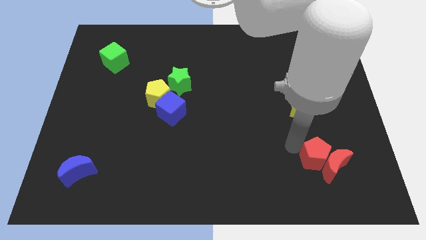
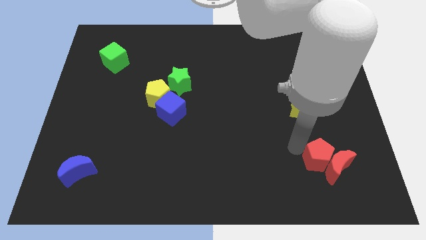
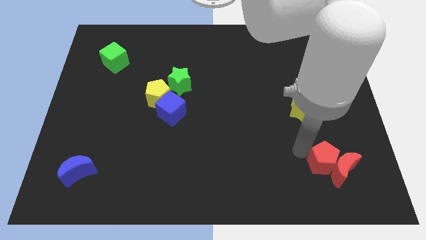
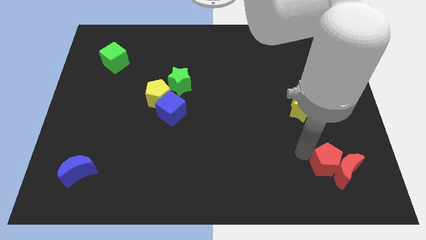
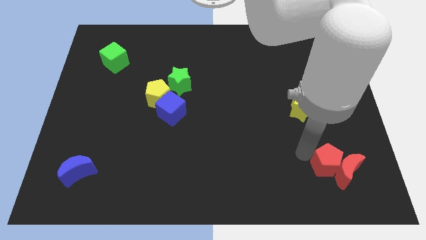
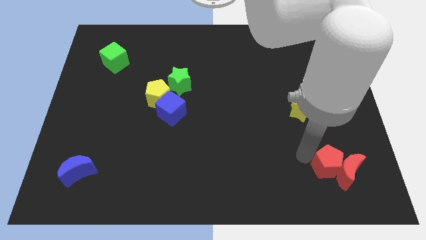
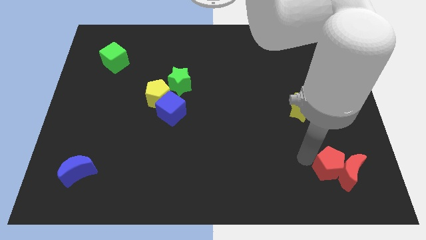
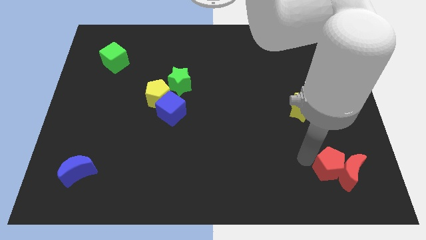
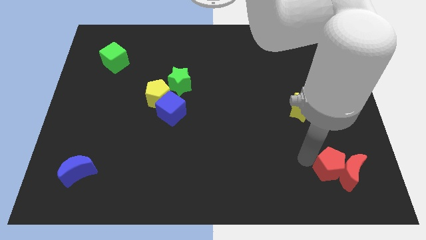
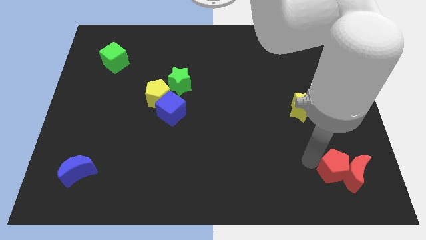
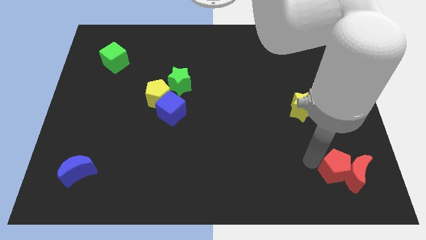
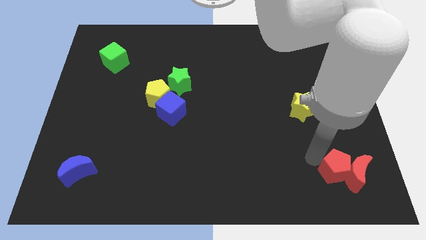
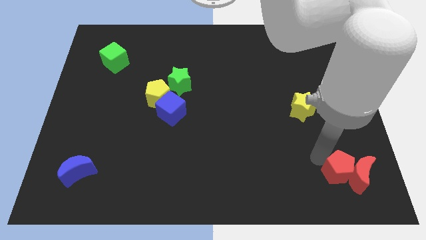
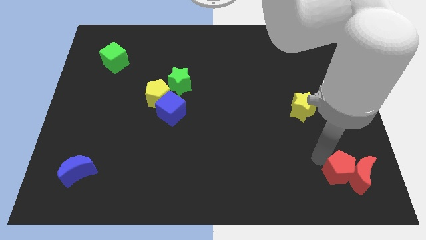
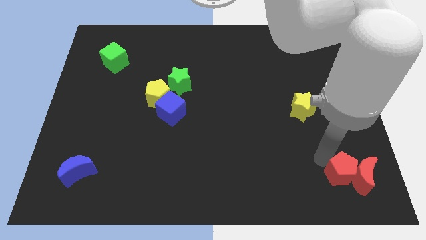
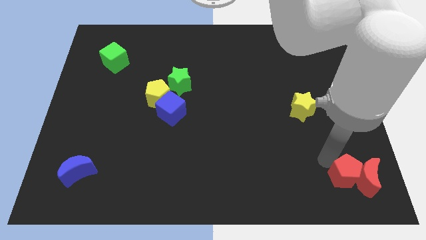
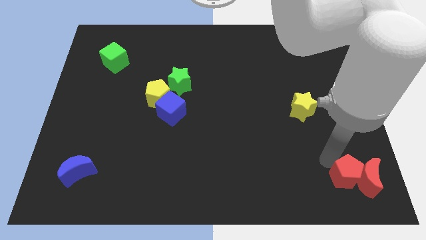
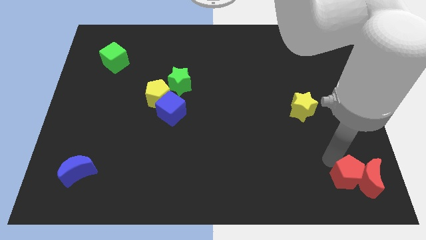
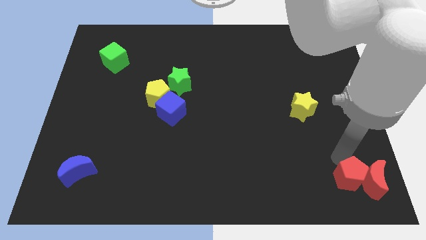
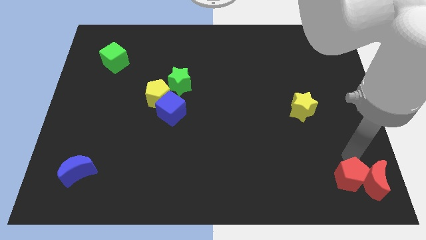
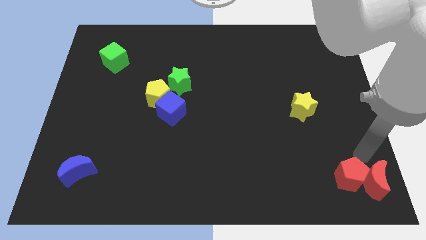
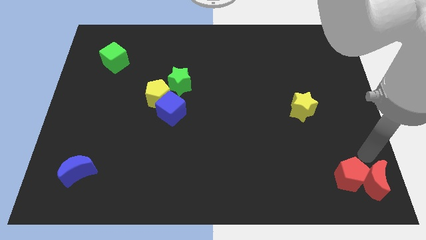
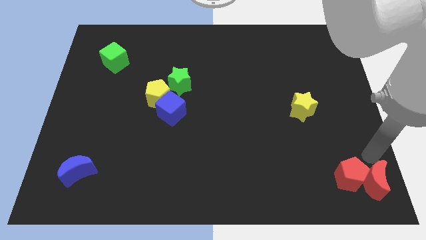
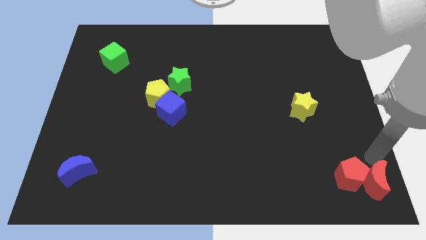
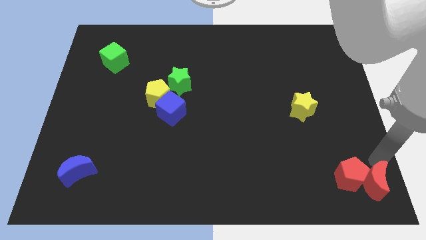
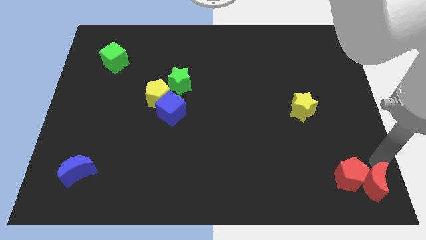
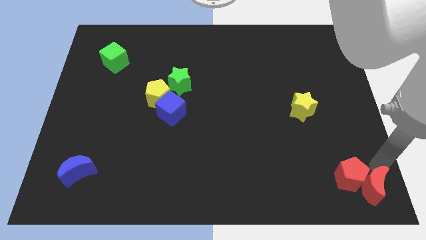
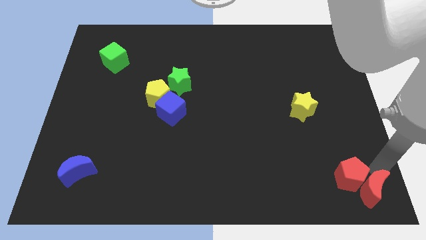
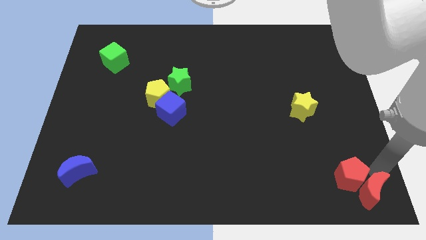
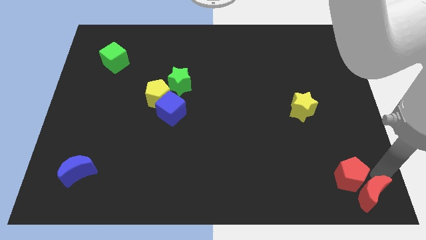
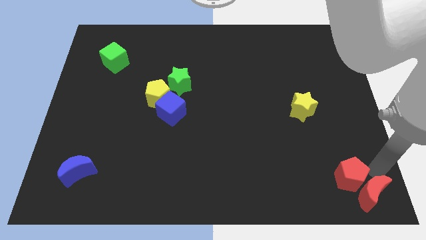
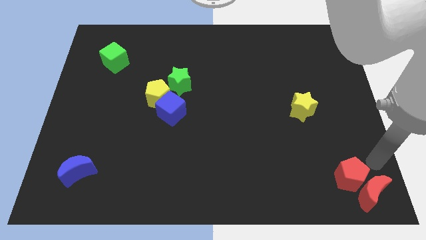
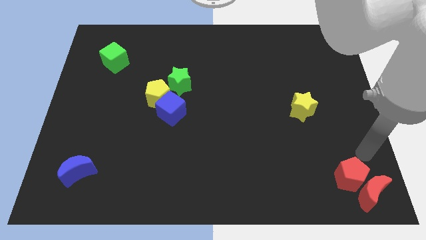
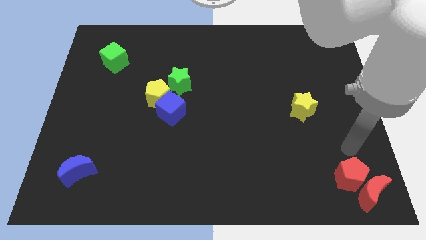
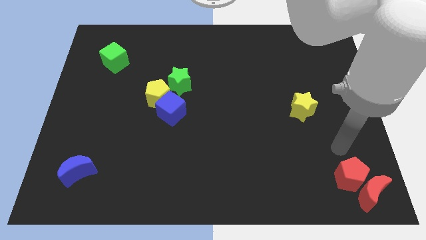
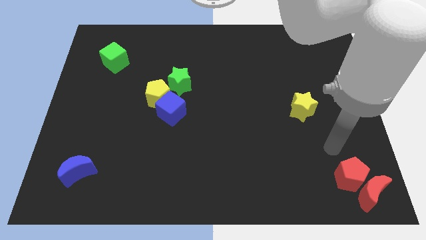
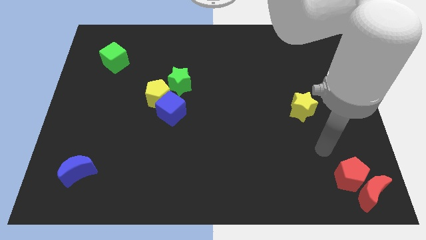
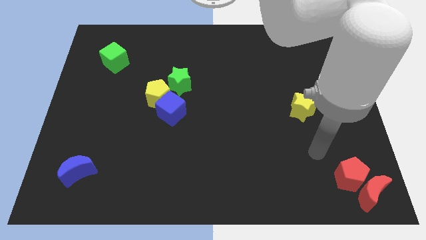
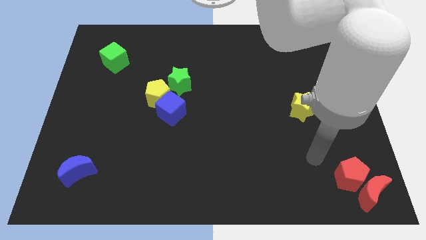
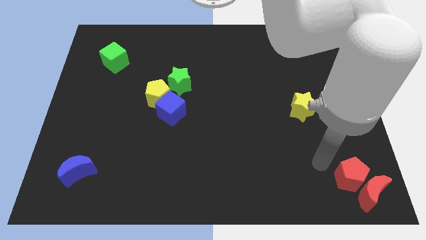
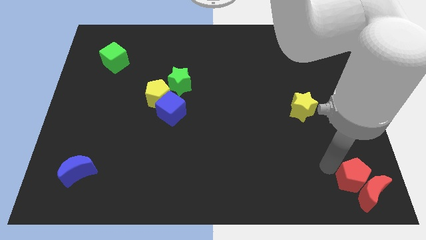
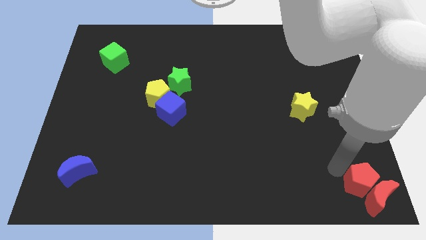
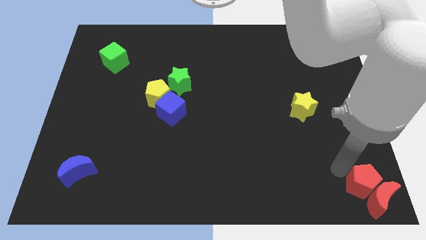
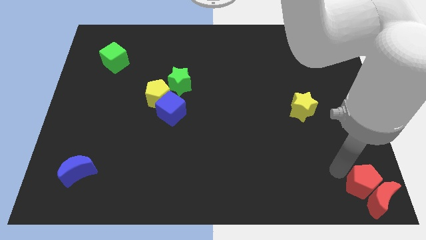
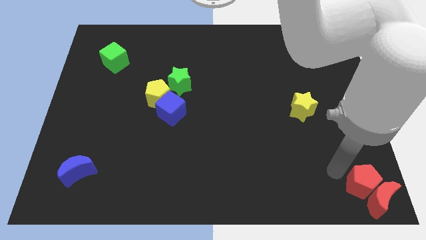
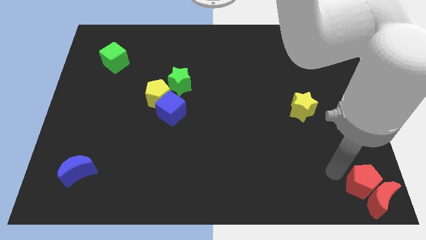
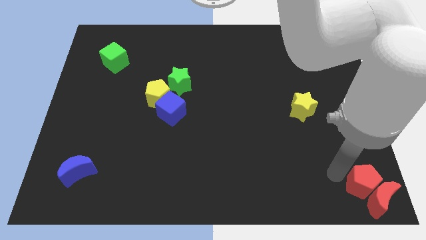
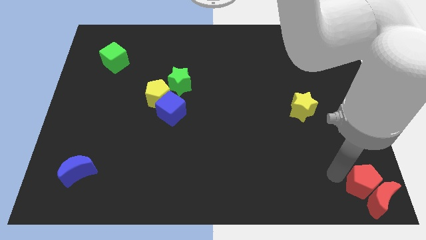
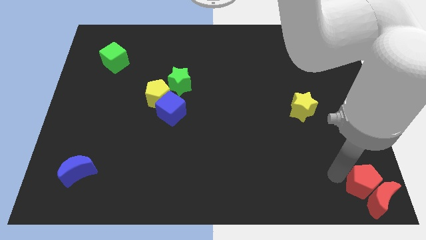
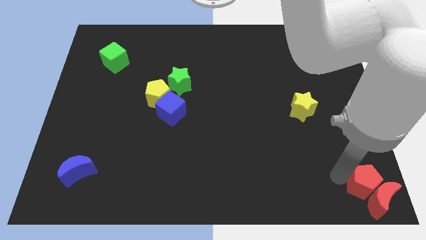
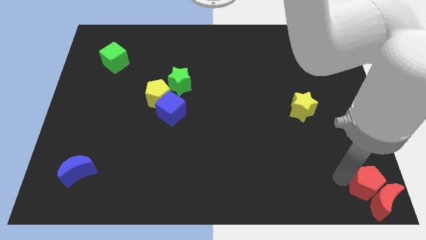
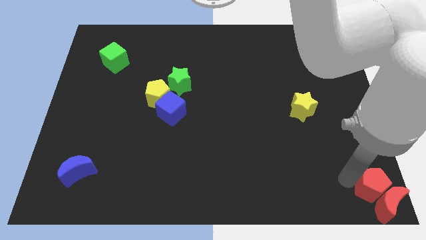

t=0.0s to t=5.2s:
move the red blocks at the bottom right corner of the board

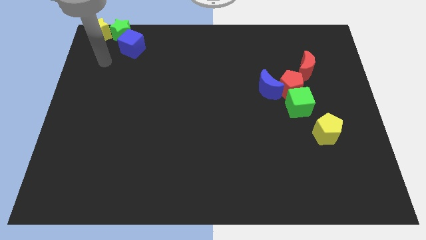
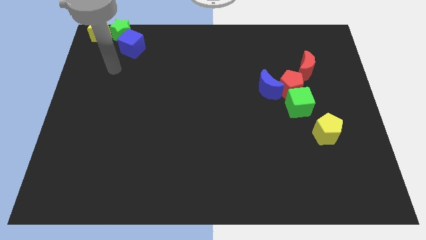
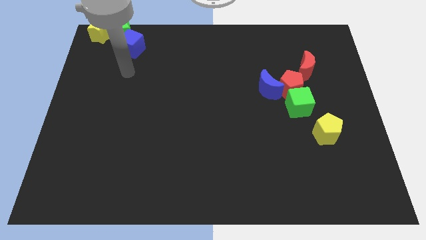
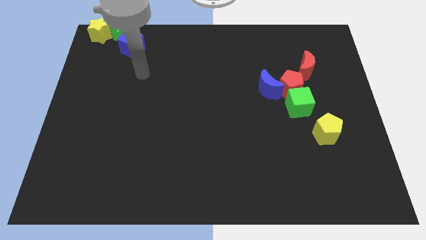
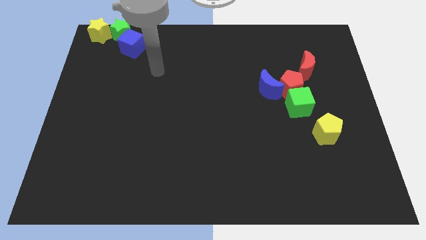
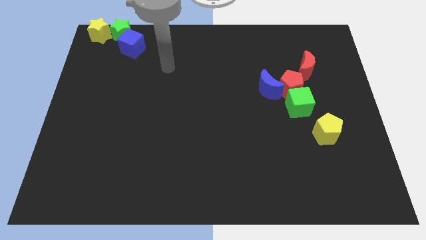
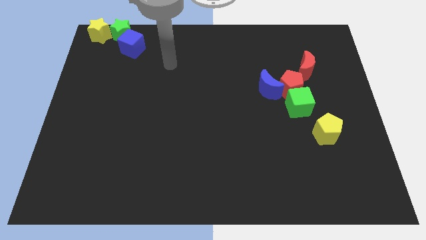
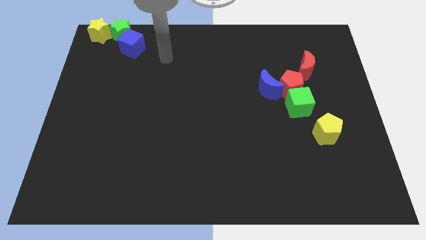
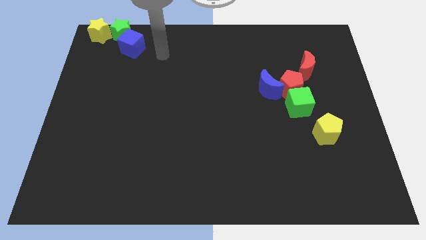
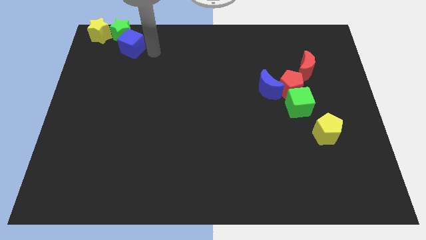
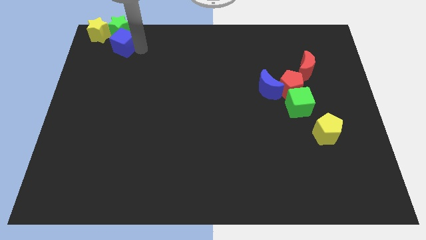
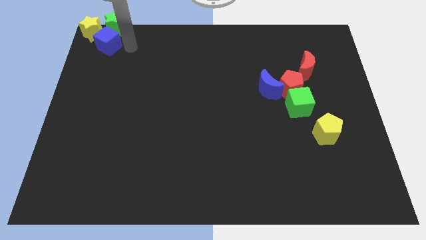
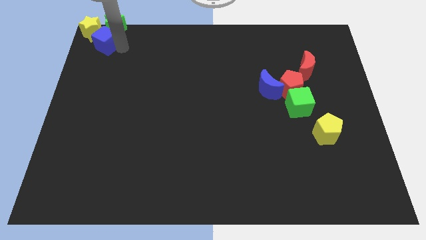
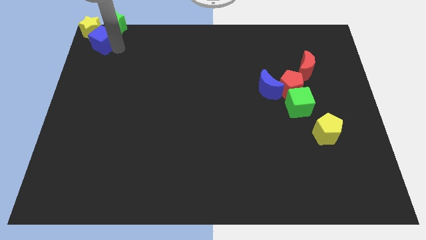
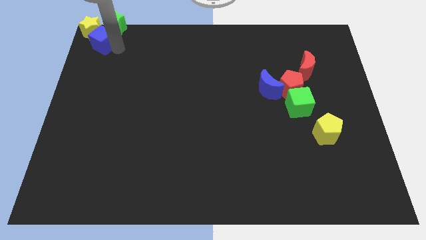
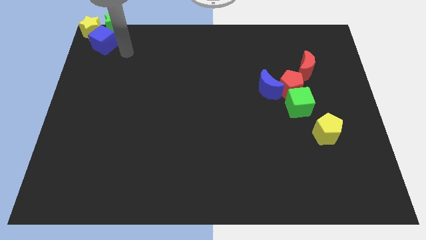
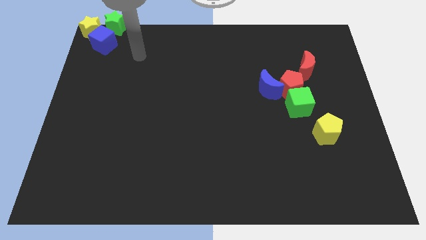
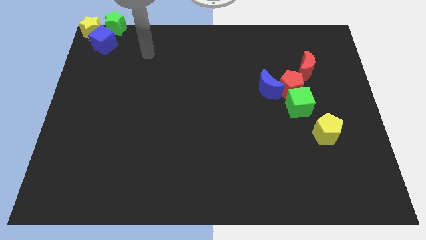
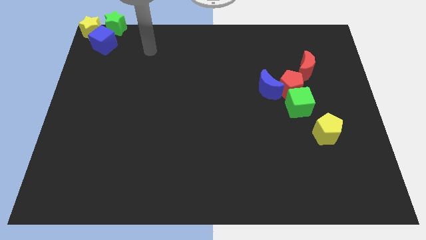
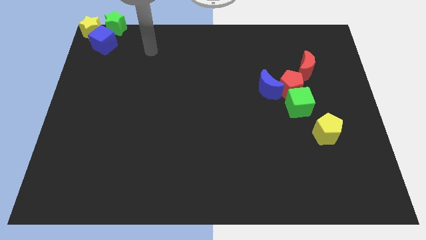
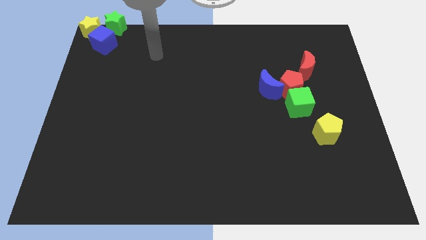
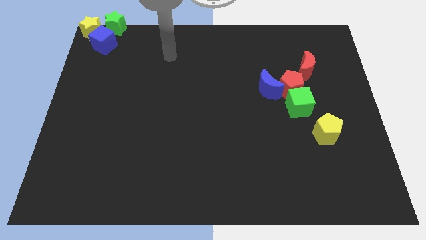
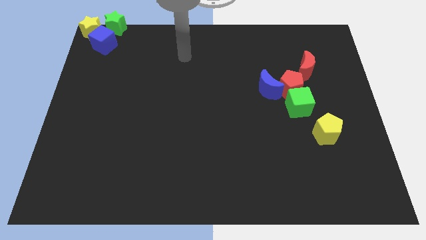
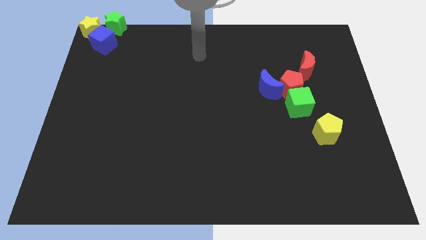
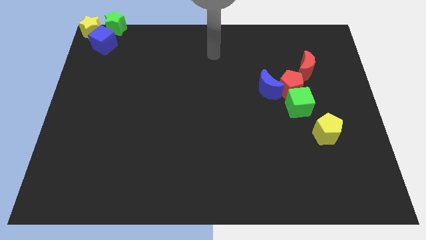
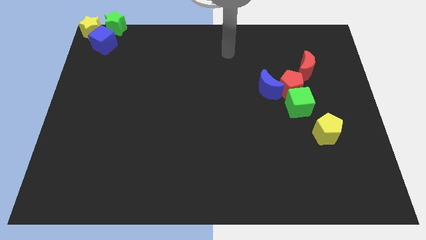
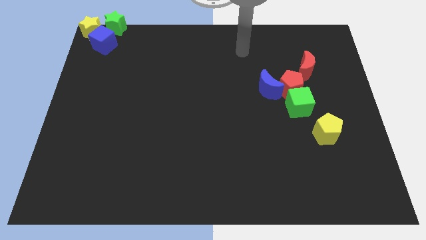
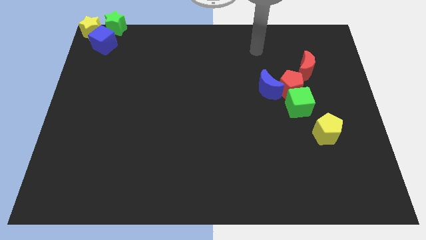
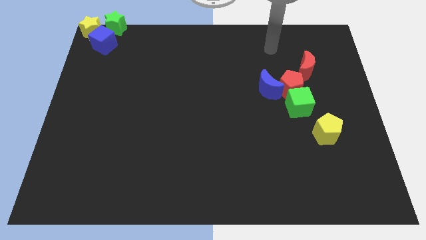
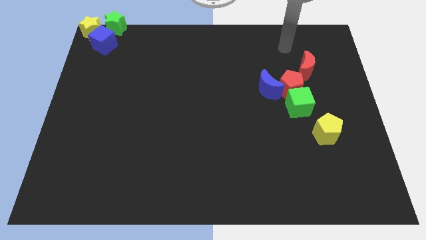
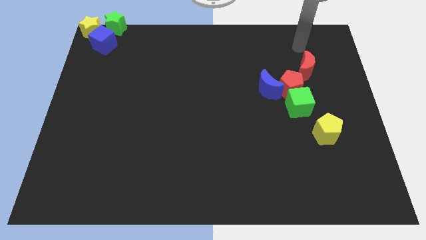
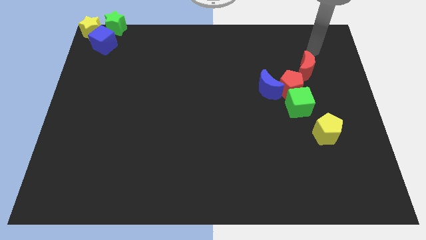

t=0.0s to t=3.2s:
put the blue cube green star and yellow star at the top left corner of the board

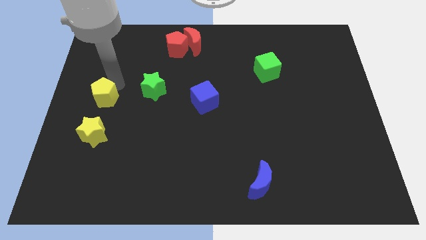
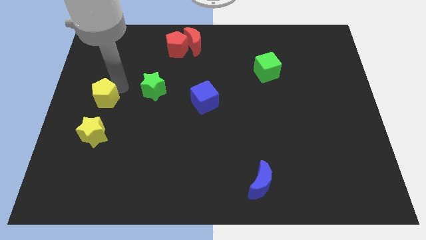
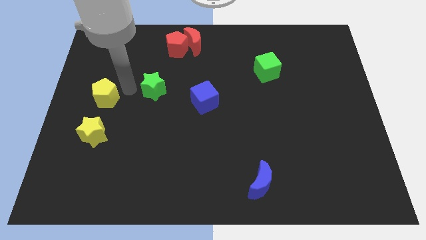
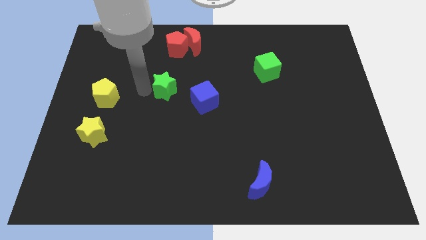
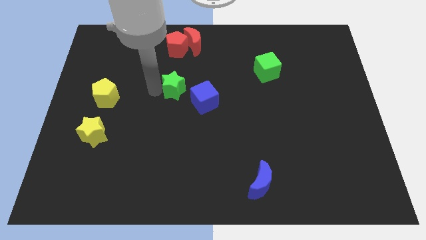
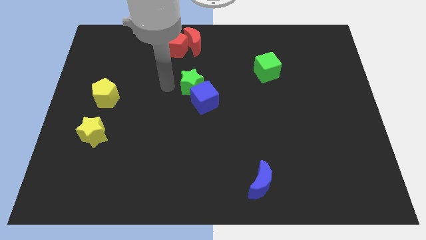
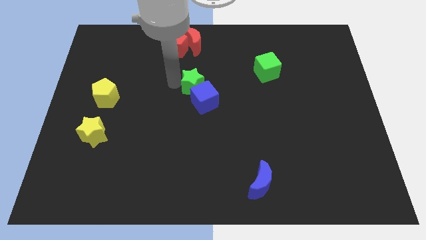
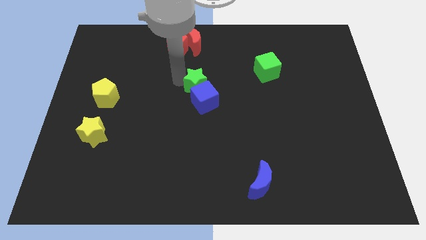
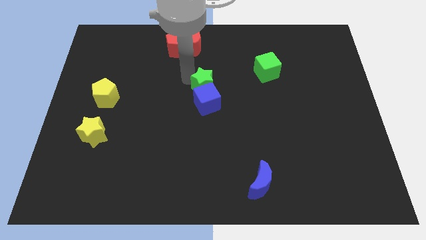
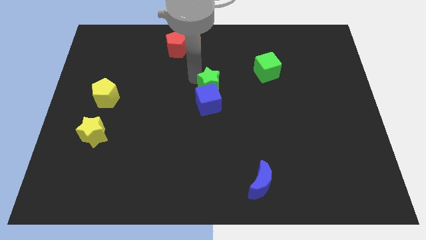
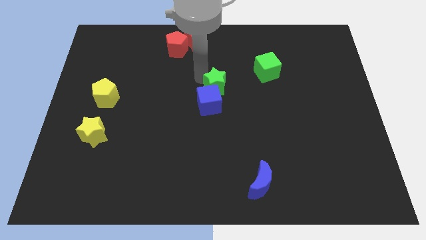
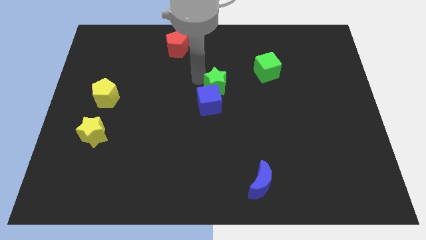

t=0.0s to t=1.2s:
push green star above blue cube
